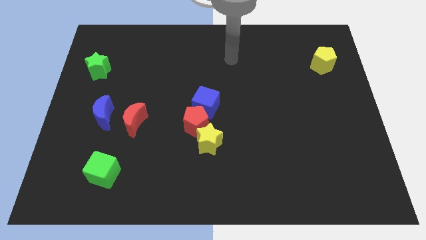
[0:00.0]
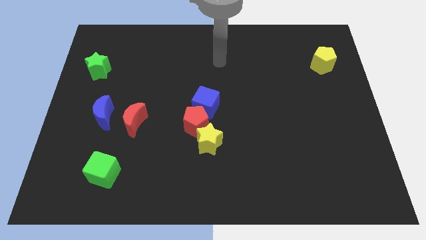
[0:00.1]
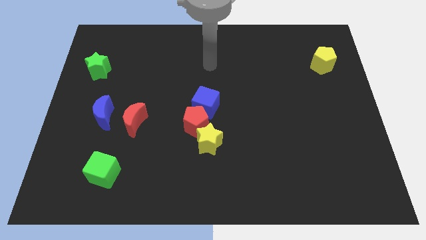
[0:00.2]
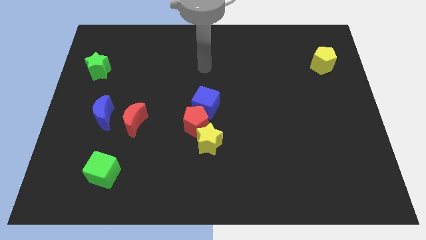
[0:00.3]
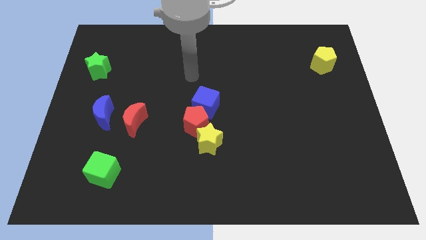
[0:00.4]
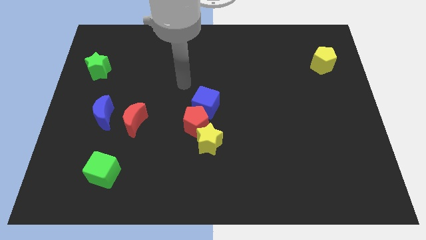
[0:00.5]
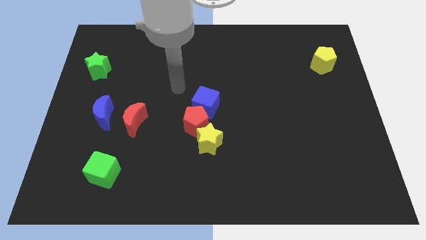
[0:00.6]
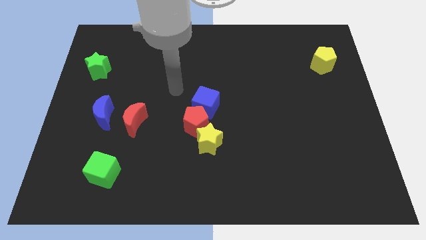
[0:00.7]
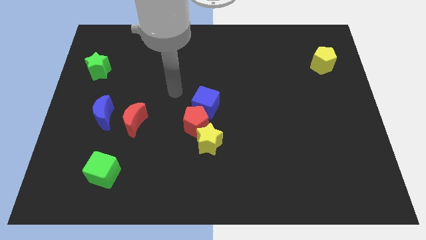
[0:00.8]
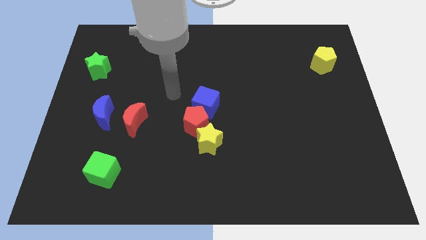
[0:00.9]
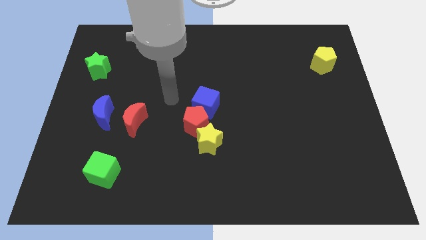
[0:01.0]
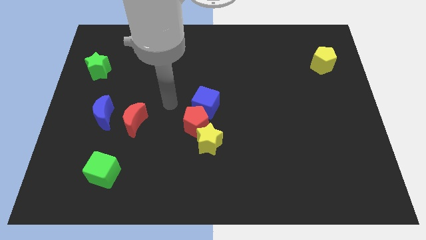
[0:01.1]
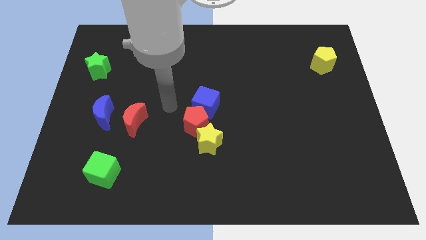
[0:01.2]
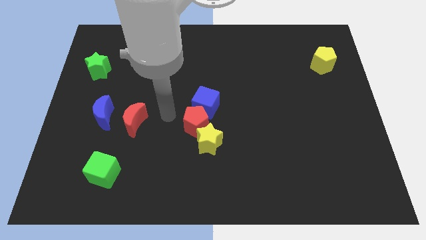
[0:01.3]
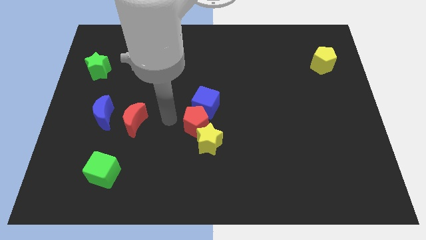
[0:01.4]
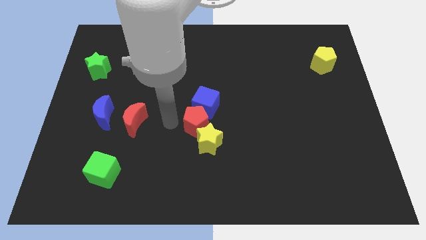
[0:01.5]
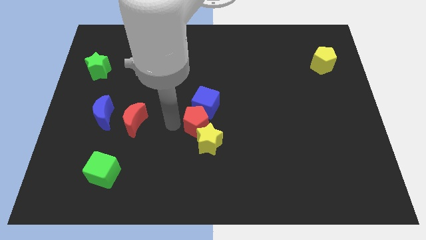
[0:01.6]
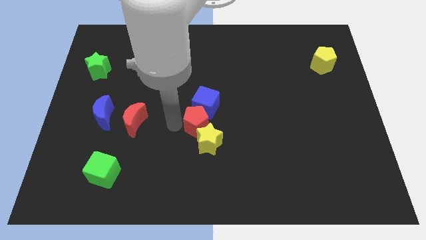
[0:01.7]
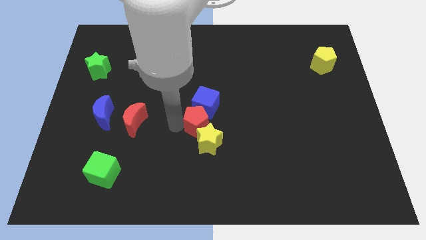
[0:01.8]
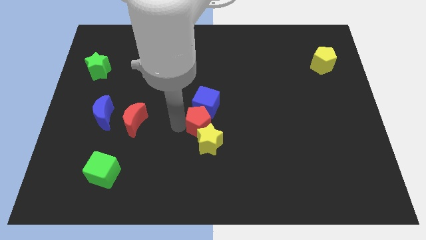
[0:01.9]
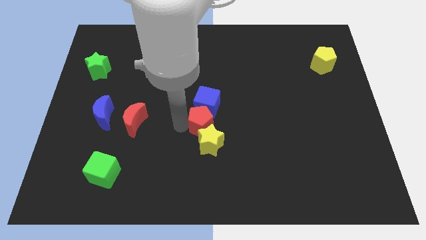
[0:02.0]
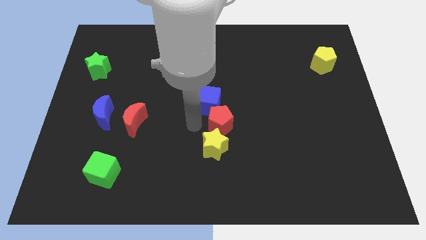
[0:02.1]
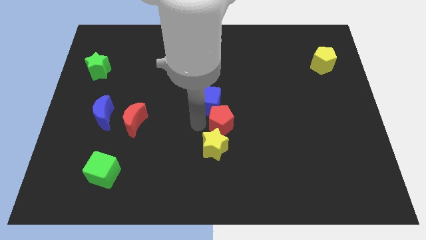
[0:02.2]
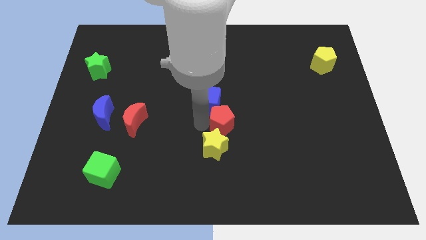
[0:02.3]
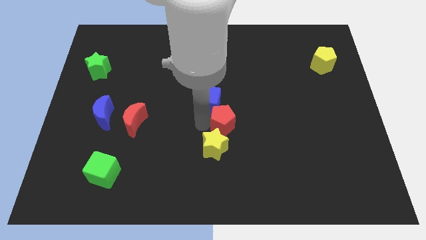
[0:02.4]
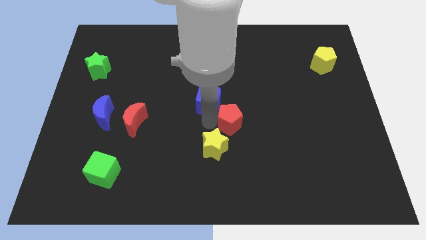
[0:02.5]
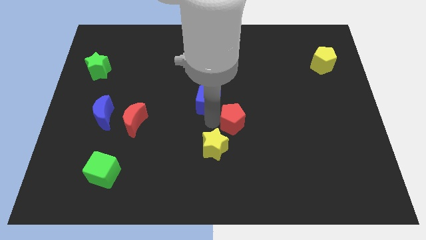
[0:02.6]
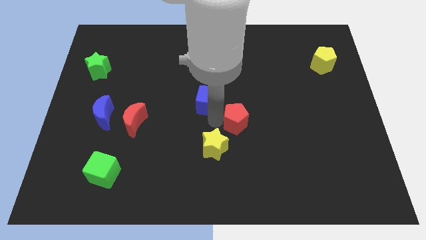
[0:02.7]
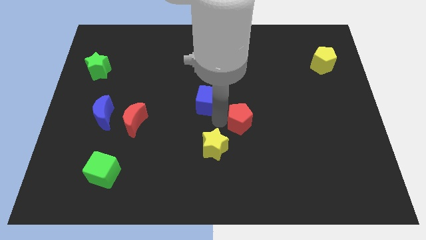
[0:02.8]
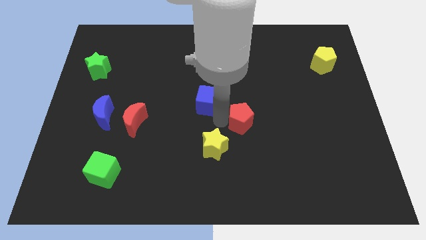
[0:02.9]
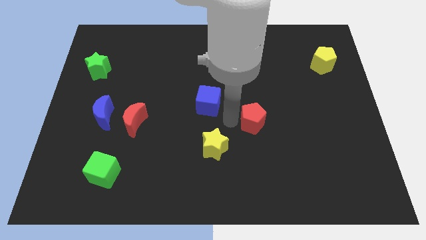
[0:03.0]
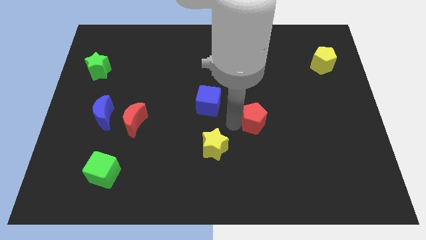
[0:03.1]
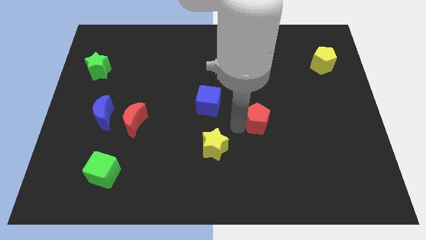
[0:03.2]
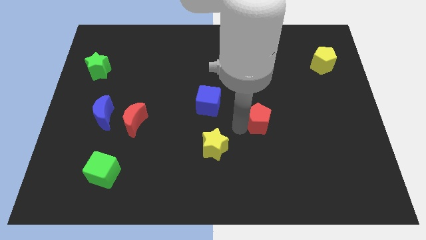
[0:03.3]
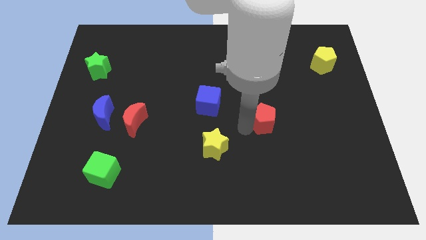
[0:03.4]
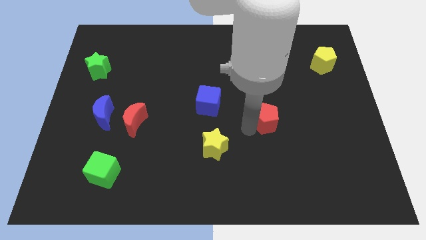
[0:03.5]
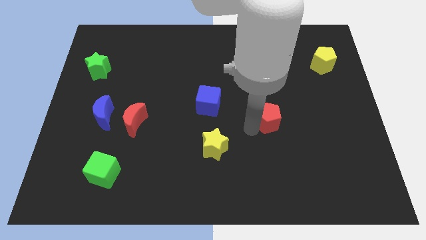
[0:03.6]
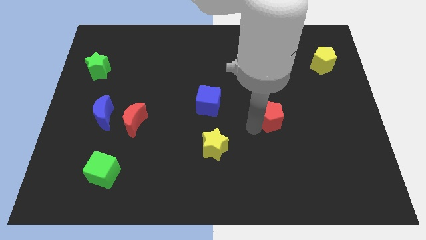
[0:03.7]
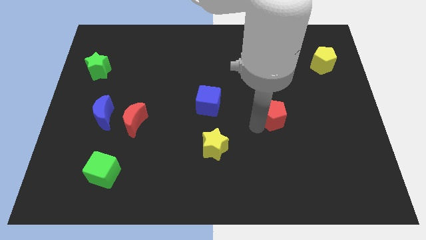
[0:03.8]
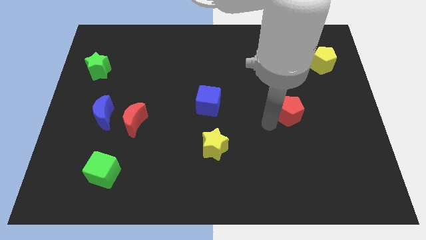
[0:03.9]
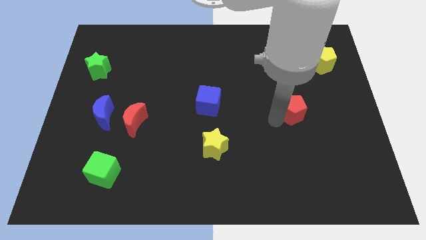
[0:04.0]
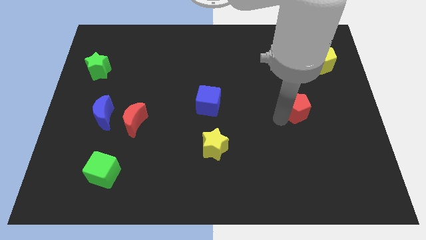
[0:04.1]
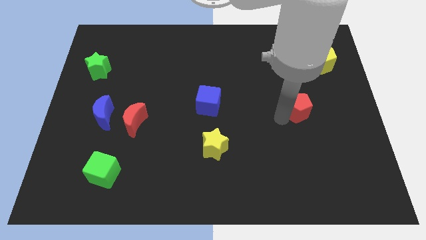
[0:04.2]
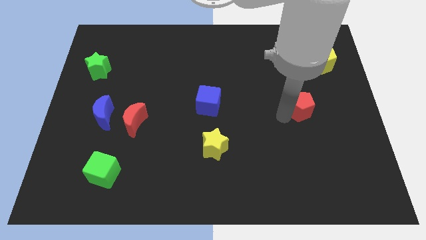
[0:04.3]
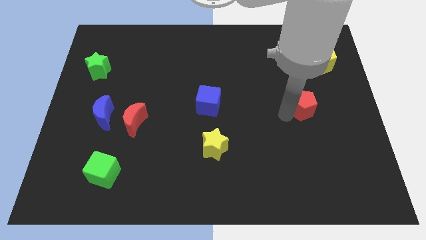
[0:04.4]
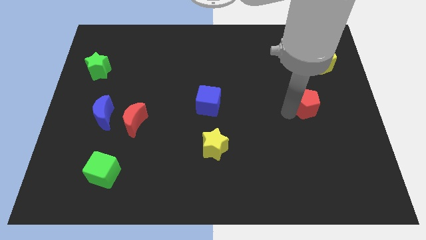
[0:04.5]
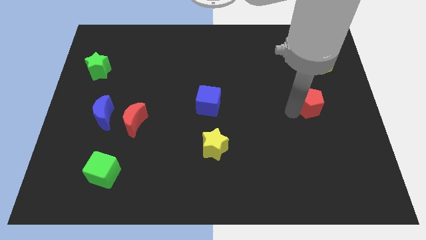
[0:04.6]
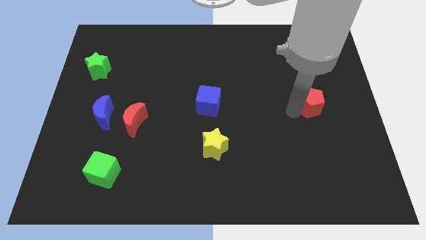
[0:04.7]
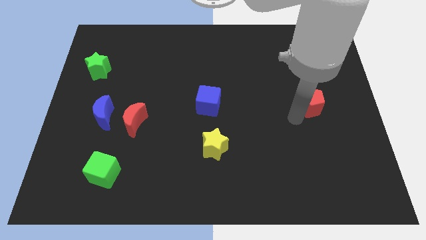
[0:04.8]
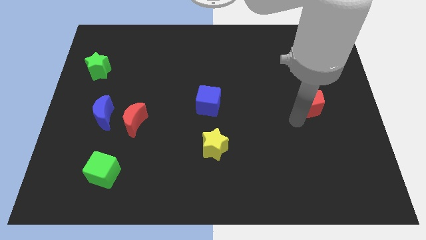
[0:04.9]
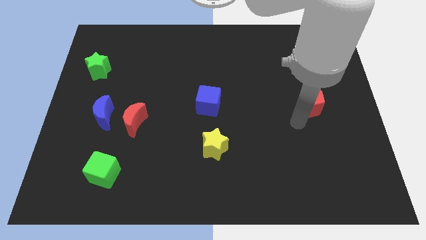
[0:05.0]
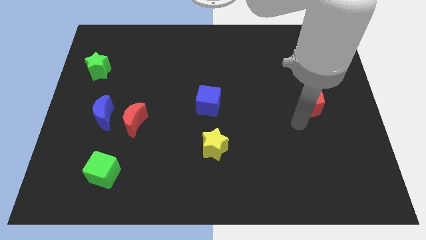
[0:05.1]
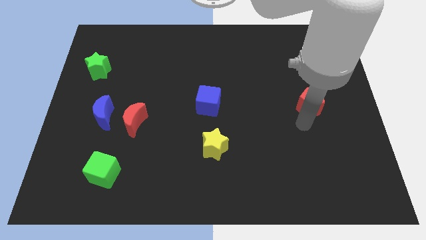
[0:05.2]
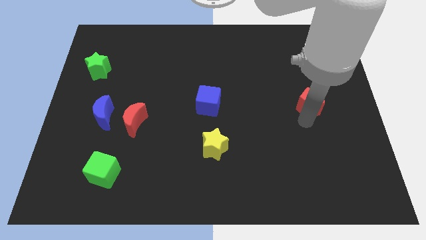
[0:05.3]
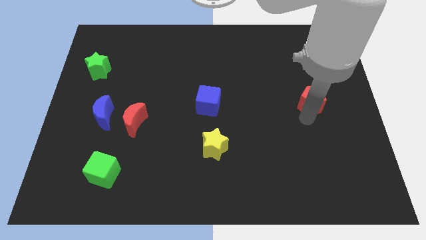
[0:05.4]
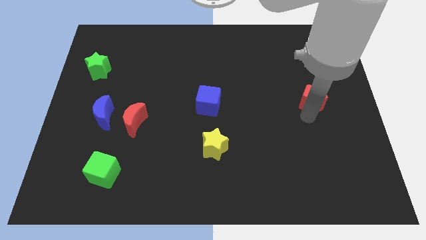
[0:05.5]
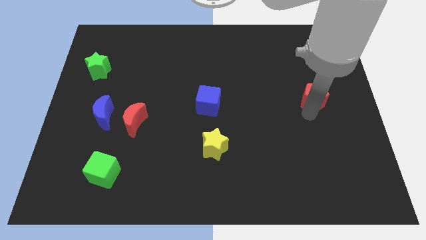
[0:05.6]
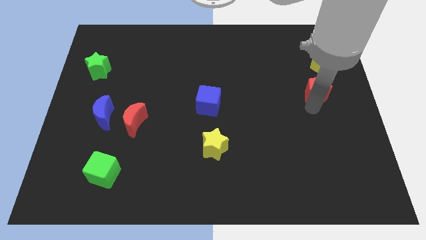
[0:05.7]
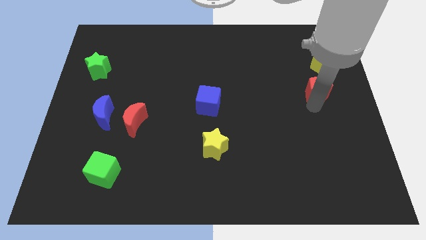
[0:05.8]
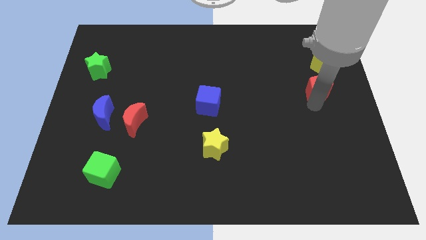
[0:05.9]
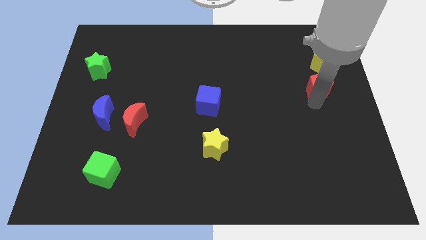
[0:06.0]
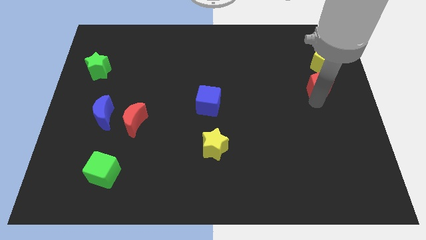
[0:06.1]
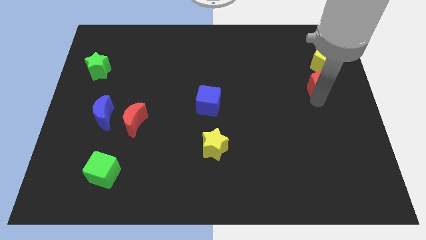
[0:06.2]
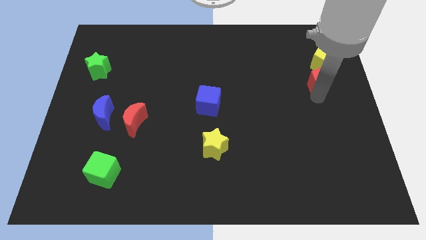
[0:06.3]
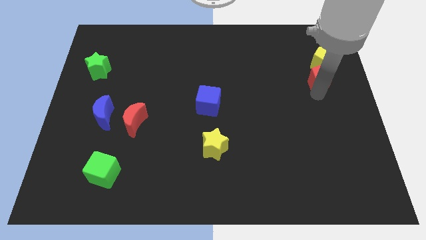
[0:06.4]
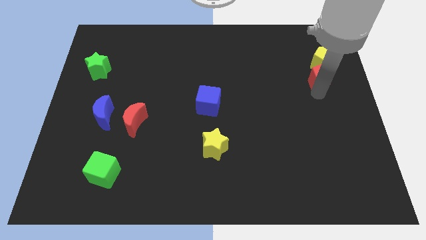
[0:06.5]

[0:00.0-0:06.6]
push the red pentagon next to the yellow pentagon

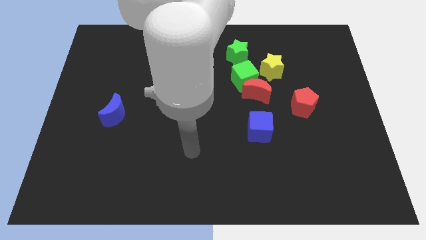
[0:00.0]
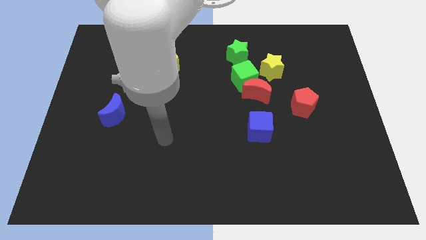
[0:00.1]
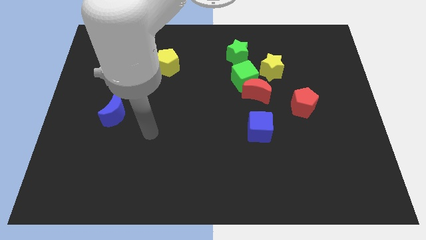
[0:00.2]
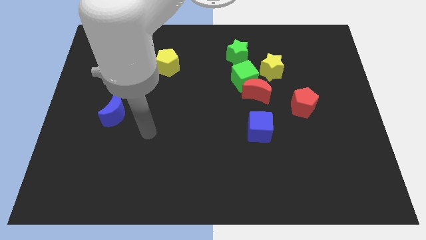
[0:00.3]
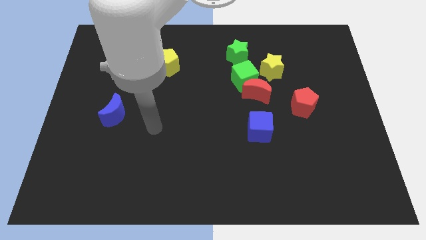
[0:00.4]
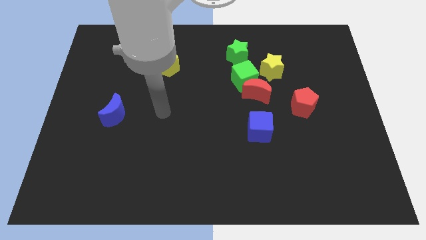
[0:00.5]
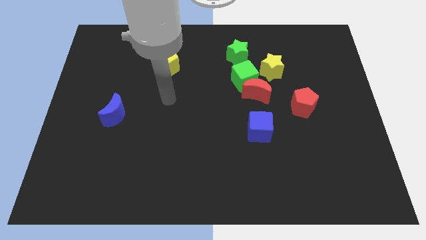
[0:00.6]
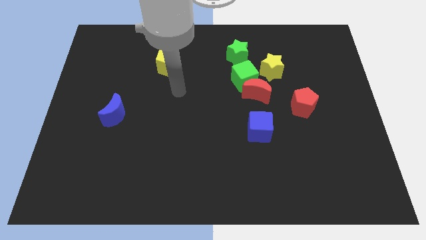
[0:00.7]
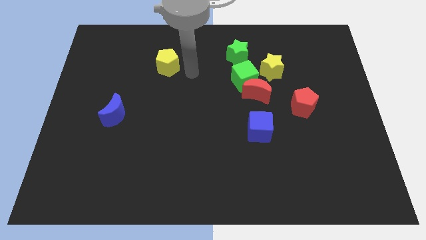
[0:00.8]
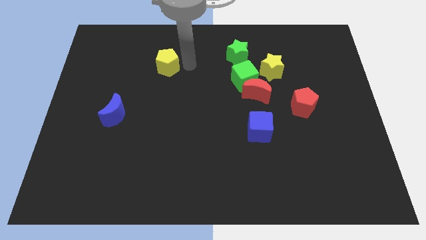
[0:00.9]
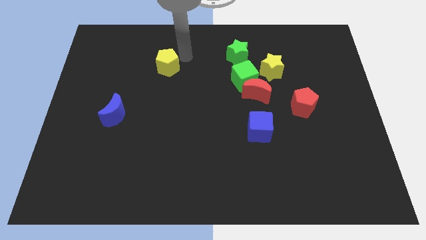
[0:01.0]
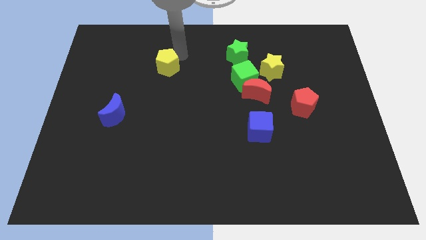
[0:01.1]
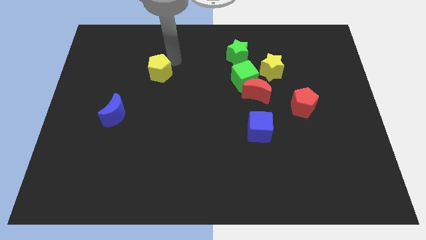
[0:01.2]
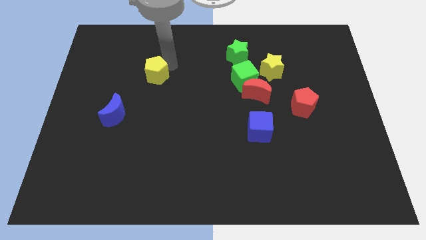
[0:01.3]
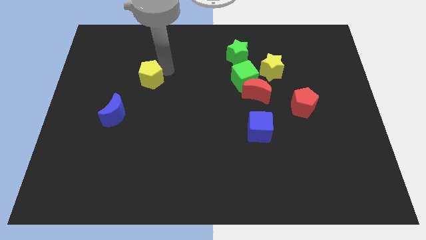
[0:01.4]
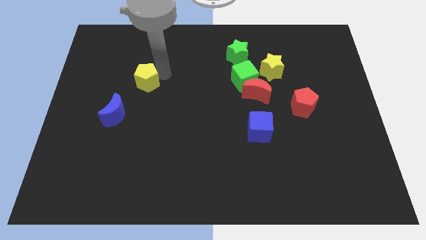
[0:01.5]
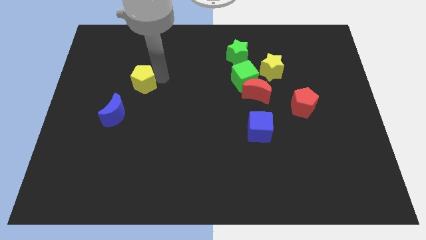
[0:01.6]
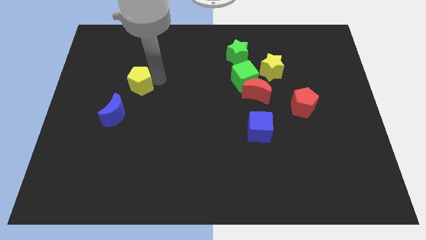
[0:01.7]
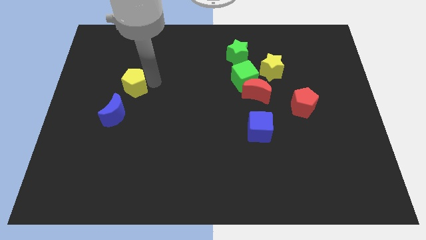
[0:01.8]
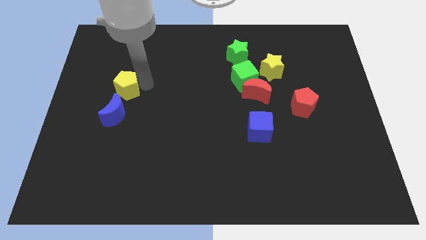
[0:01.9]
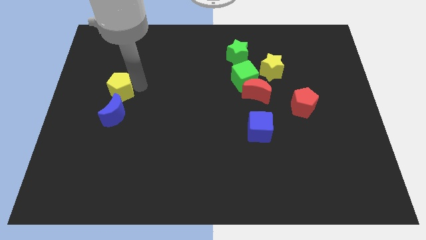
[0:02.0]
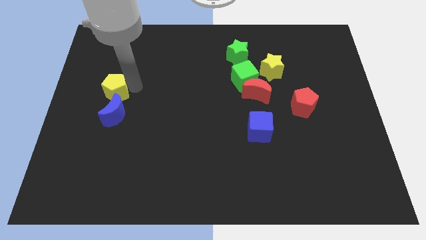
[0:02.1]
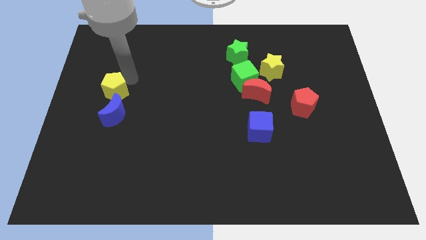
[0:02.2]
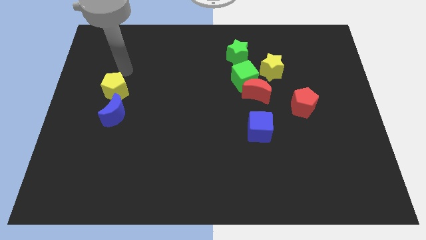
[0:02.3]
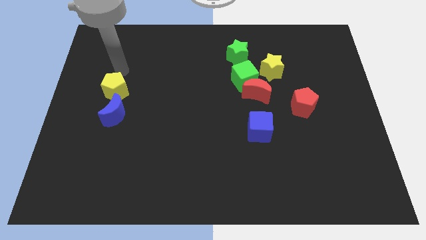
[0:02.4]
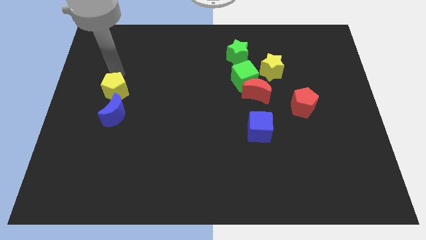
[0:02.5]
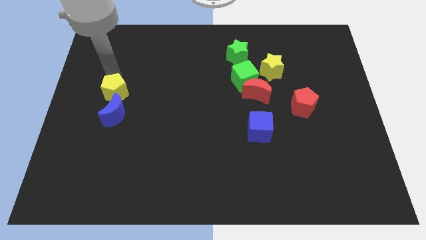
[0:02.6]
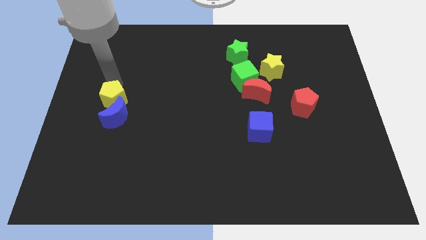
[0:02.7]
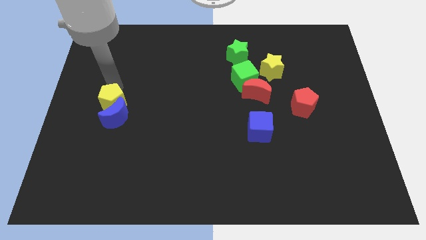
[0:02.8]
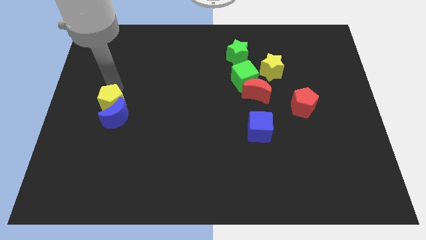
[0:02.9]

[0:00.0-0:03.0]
push the yellow pentagon next to the blue moon
